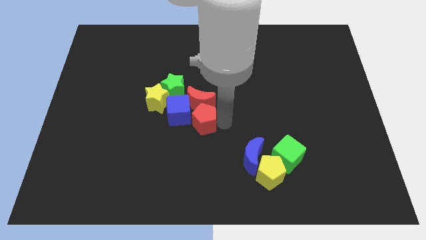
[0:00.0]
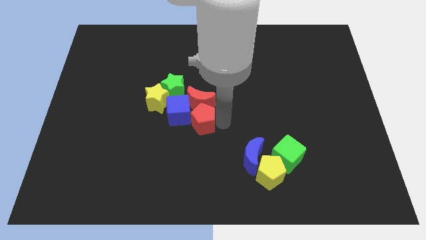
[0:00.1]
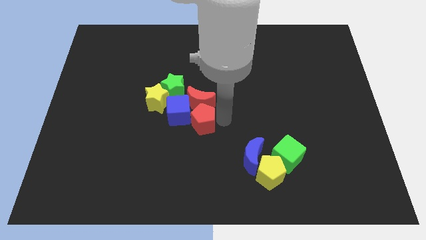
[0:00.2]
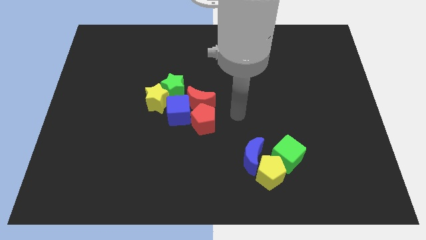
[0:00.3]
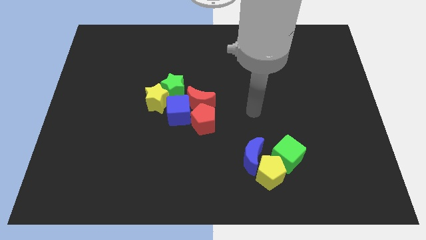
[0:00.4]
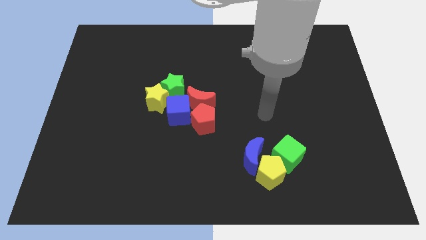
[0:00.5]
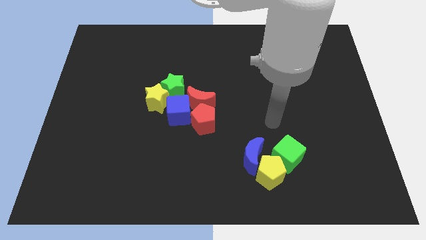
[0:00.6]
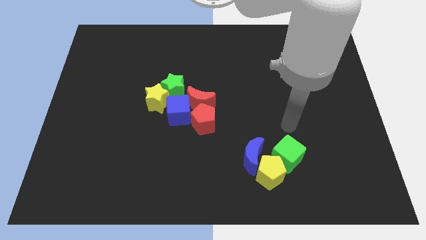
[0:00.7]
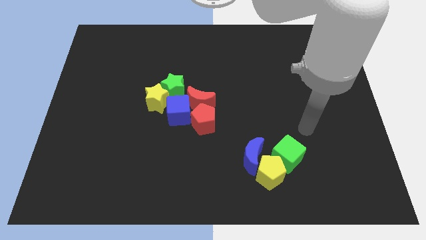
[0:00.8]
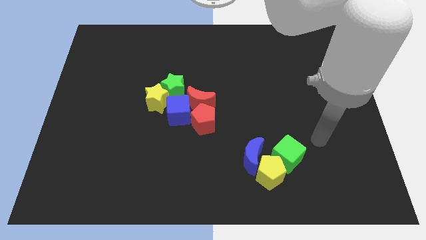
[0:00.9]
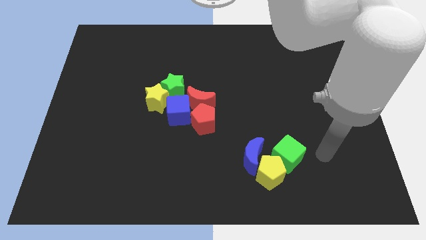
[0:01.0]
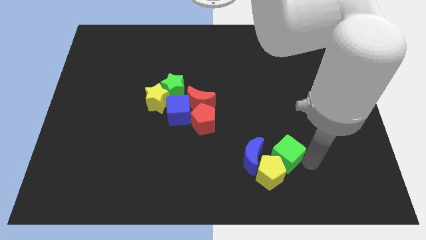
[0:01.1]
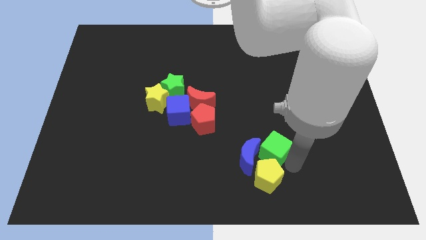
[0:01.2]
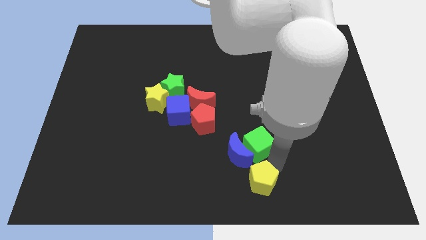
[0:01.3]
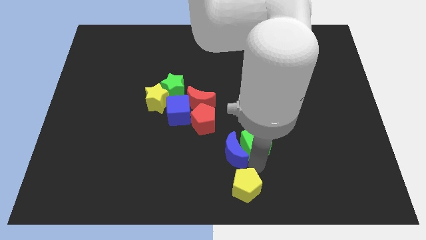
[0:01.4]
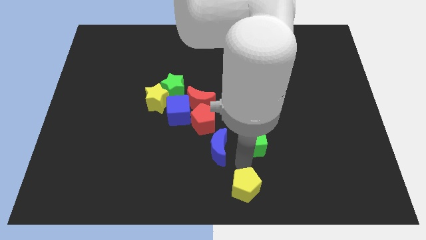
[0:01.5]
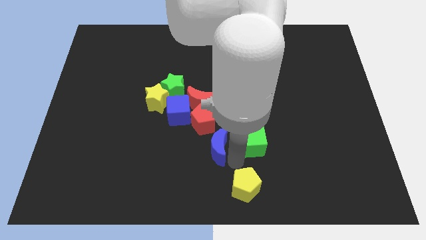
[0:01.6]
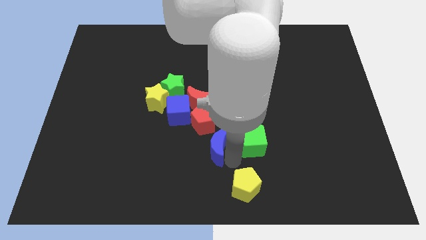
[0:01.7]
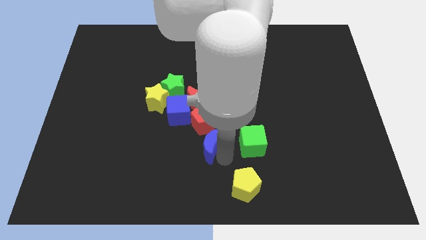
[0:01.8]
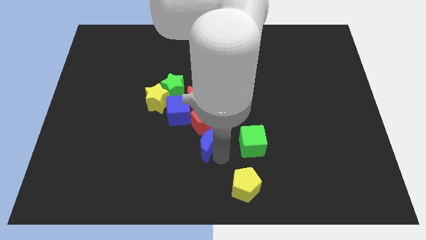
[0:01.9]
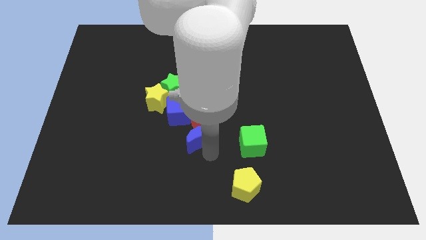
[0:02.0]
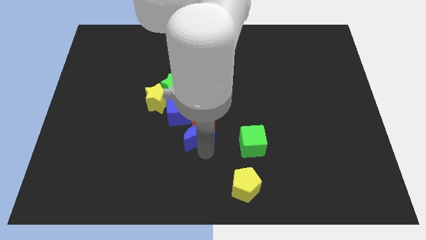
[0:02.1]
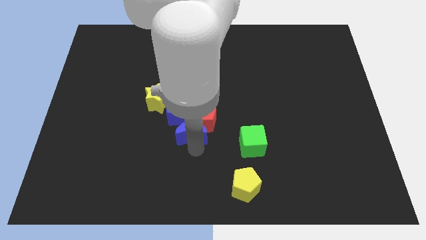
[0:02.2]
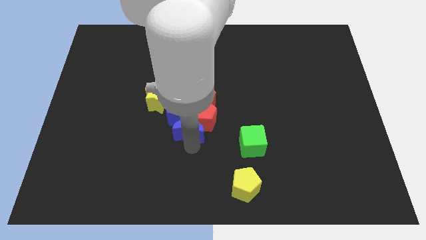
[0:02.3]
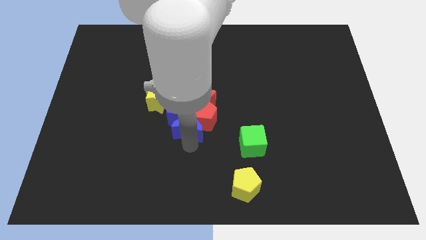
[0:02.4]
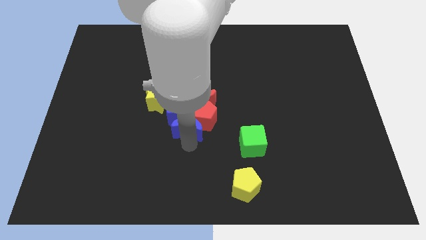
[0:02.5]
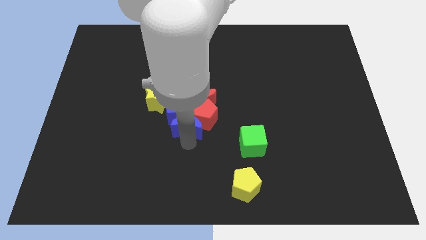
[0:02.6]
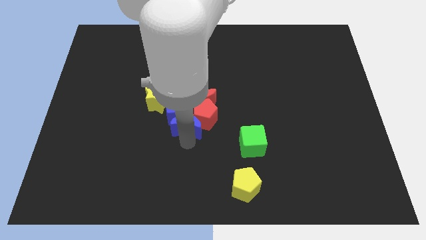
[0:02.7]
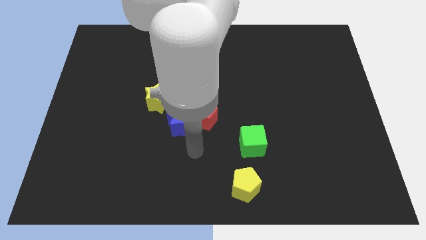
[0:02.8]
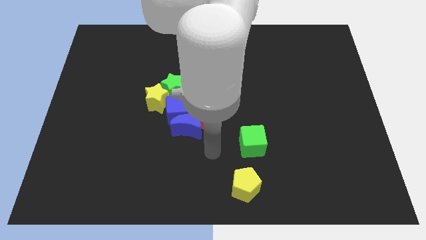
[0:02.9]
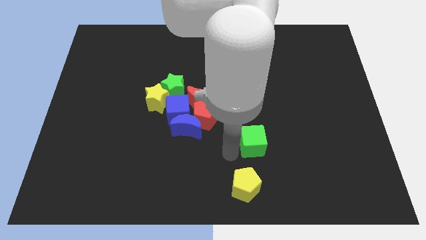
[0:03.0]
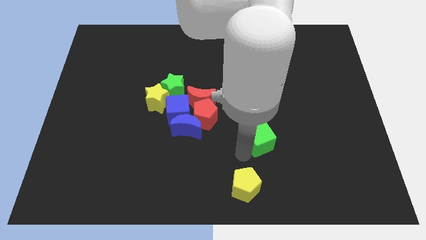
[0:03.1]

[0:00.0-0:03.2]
push the blue moon to the bottom left side of the red pentagon

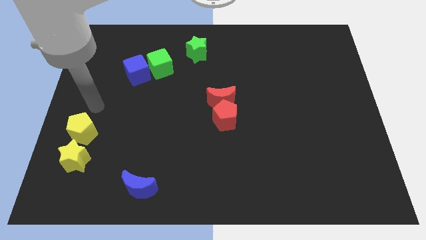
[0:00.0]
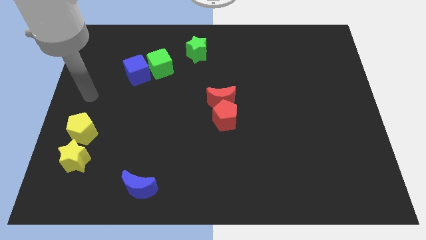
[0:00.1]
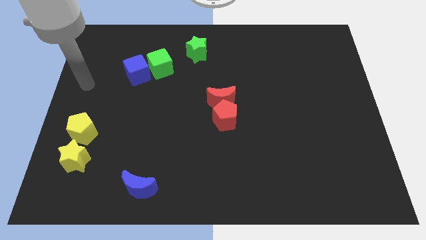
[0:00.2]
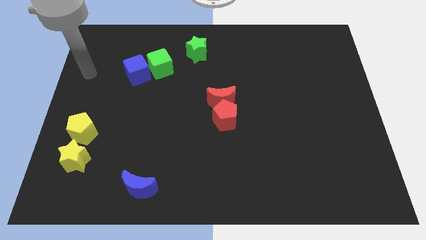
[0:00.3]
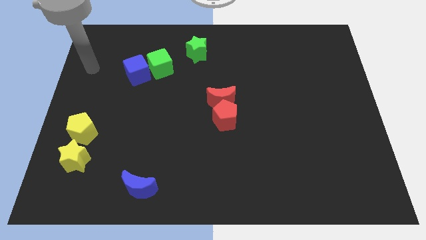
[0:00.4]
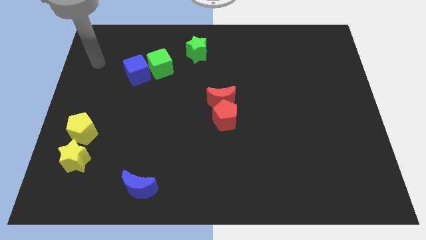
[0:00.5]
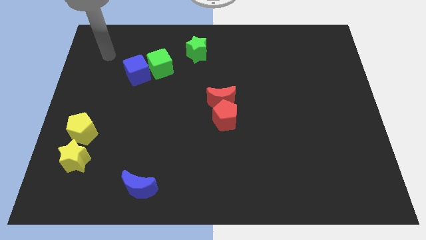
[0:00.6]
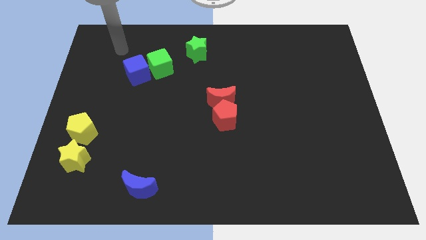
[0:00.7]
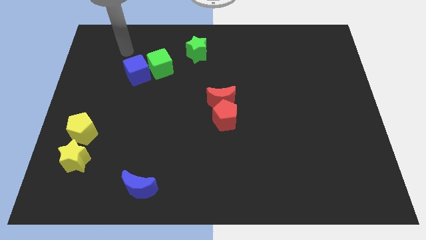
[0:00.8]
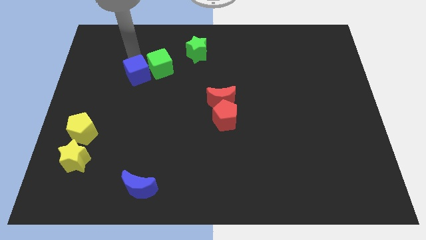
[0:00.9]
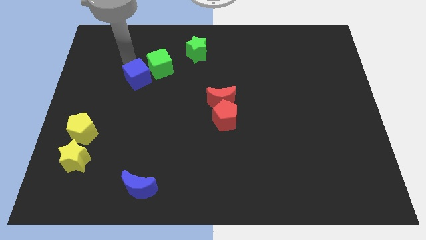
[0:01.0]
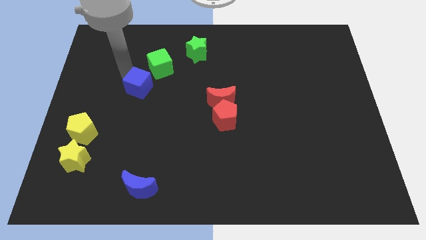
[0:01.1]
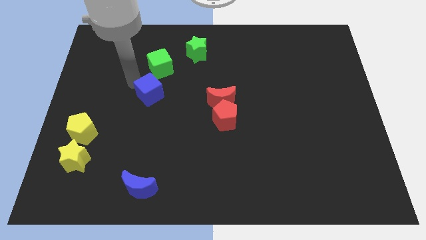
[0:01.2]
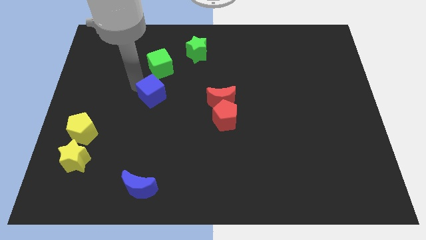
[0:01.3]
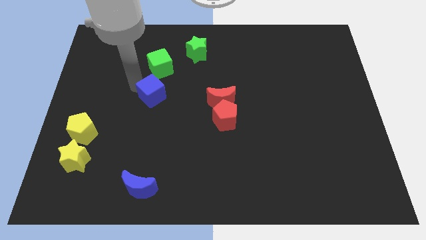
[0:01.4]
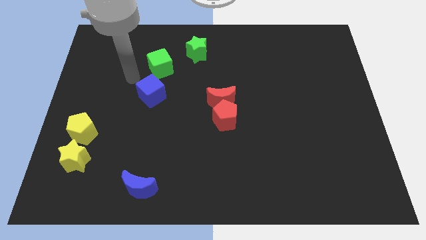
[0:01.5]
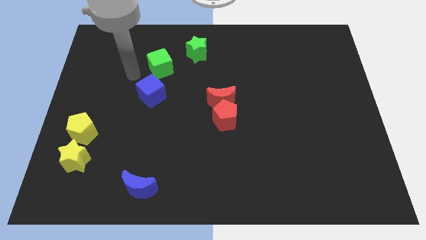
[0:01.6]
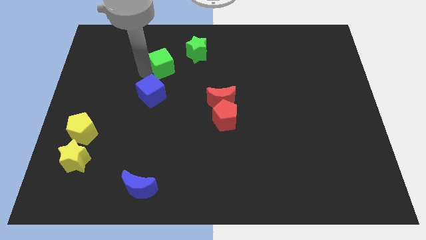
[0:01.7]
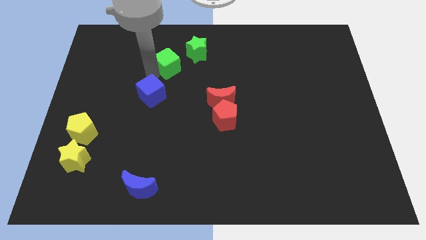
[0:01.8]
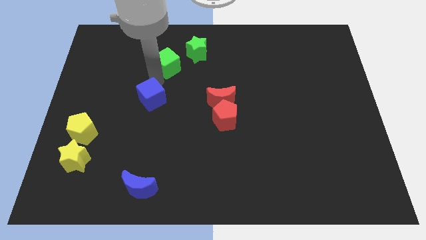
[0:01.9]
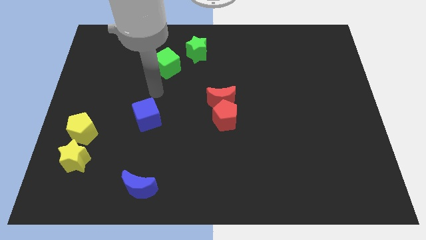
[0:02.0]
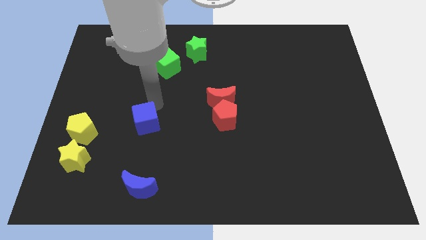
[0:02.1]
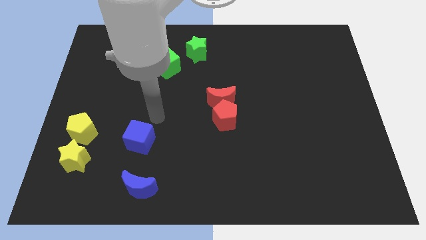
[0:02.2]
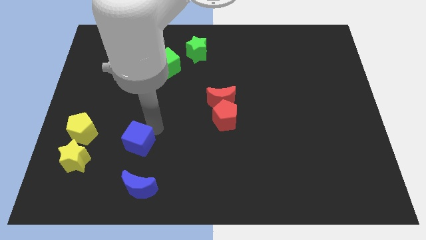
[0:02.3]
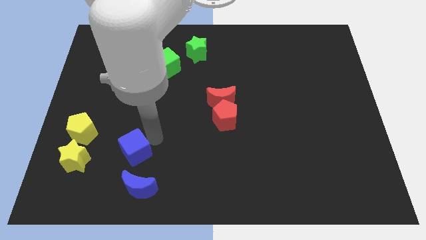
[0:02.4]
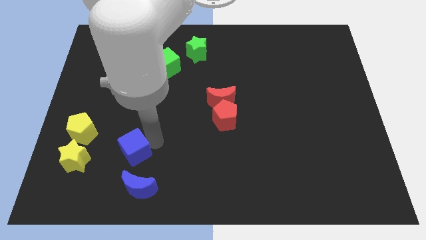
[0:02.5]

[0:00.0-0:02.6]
place the blue cube right to the yellow star

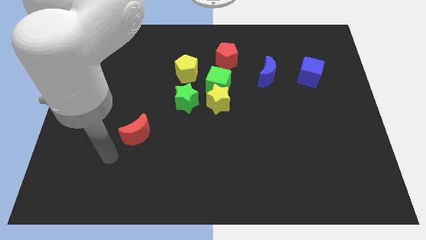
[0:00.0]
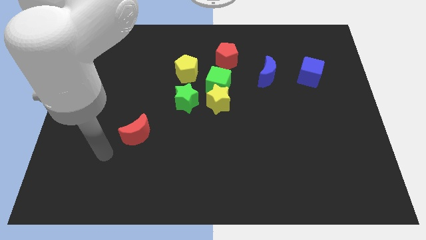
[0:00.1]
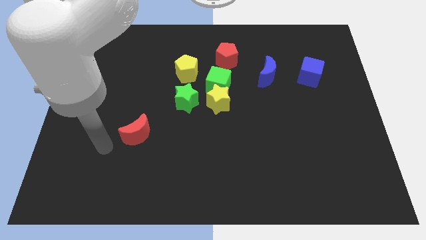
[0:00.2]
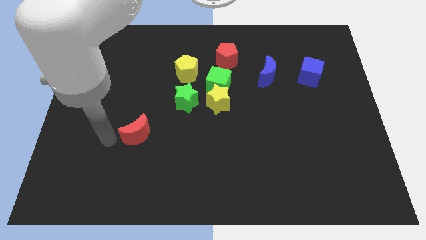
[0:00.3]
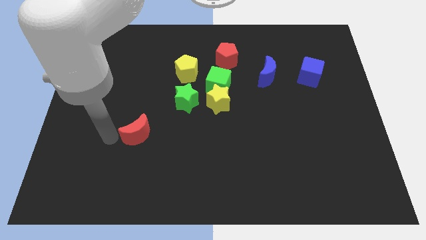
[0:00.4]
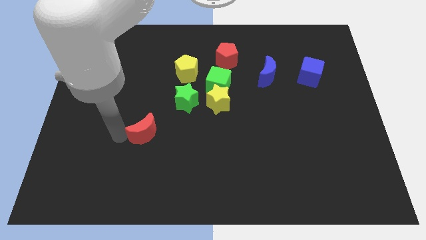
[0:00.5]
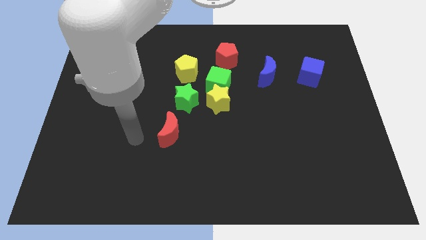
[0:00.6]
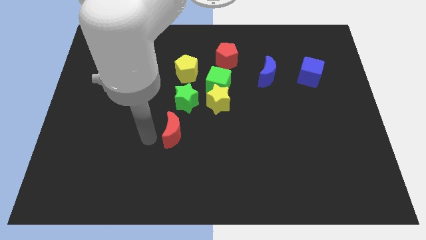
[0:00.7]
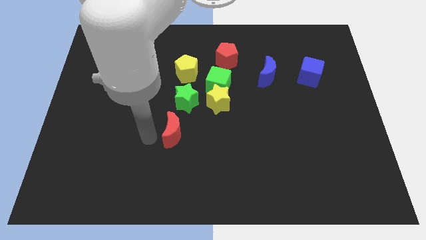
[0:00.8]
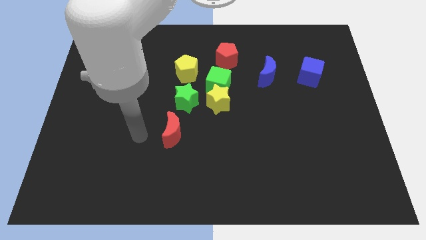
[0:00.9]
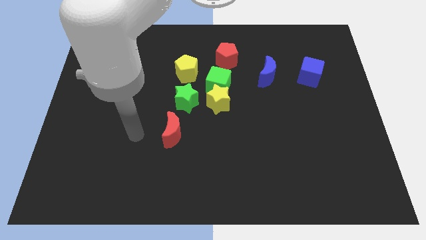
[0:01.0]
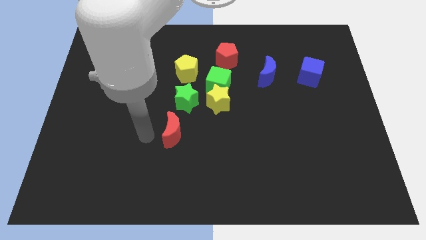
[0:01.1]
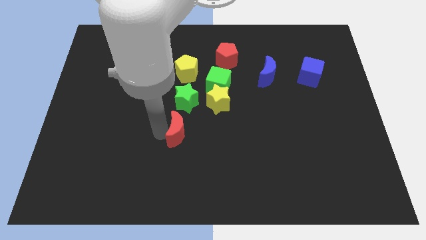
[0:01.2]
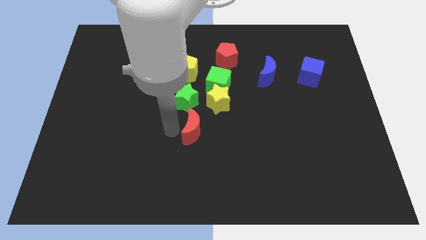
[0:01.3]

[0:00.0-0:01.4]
place the red moon below to the green star

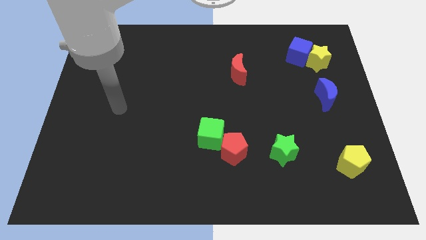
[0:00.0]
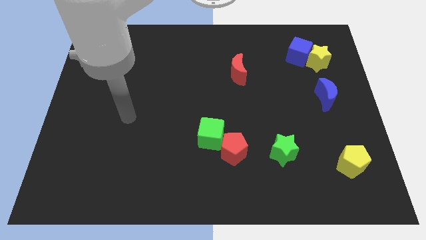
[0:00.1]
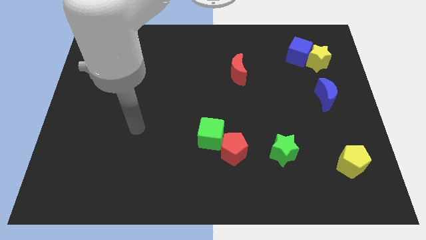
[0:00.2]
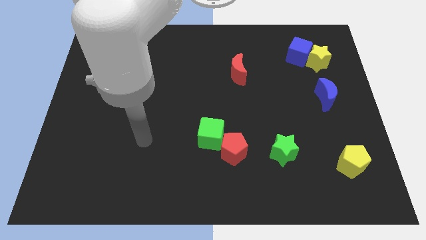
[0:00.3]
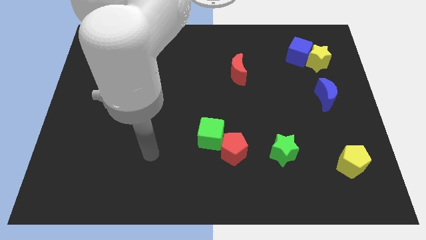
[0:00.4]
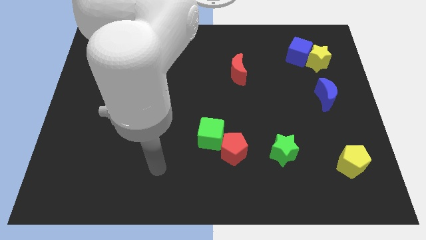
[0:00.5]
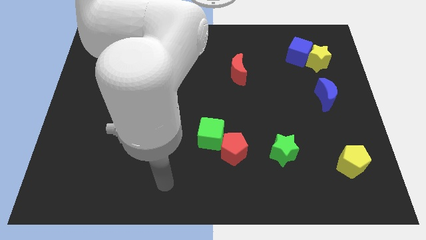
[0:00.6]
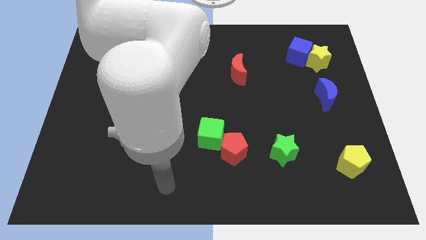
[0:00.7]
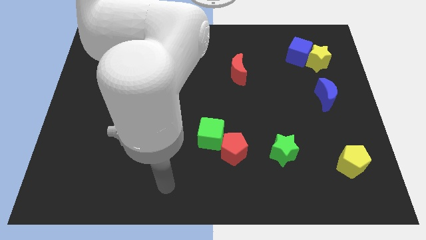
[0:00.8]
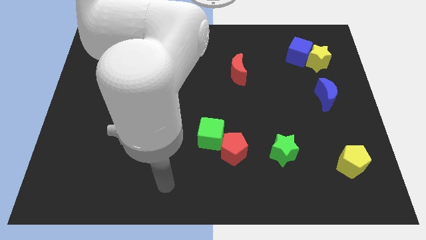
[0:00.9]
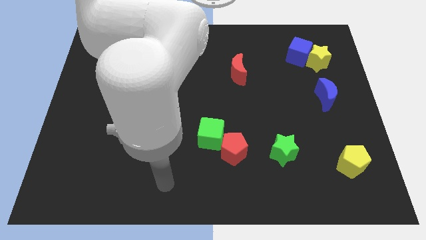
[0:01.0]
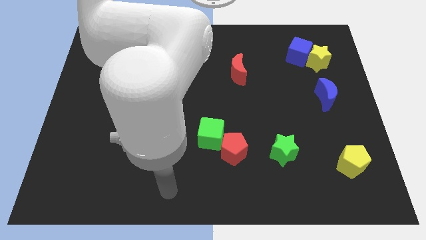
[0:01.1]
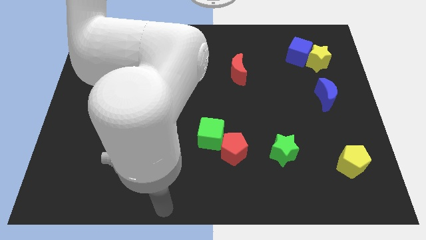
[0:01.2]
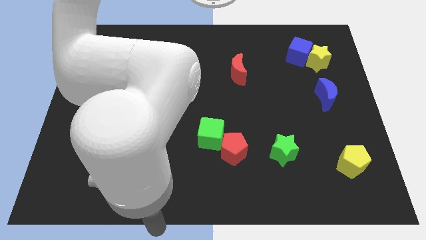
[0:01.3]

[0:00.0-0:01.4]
place the arm towards the center bottom of the board

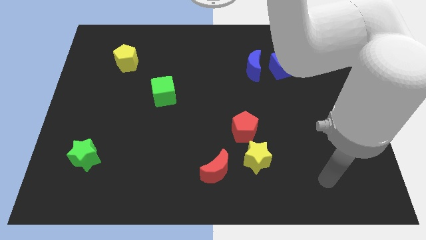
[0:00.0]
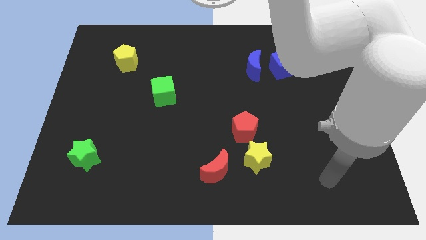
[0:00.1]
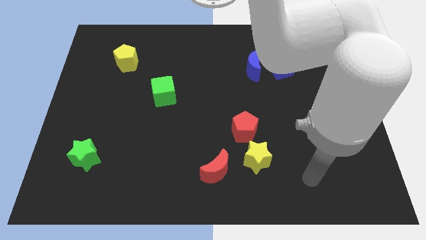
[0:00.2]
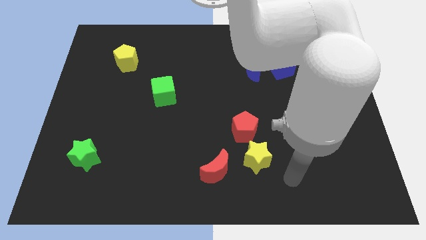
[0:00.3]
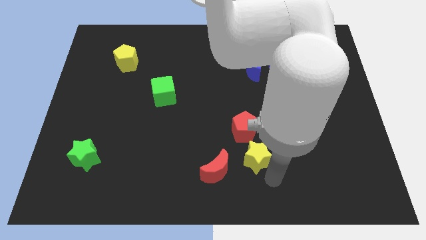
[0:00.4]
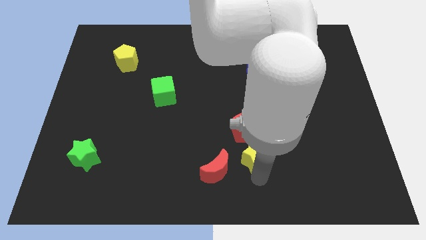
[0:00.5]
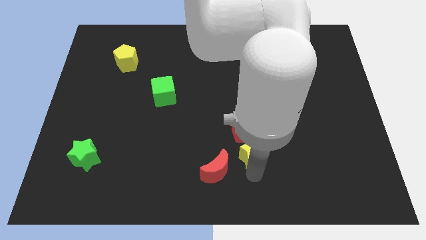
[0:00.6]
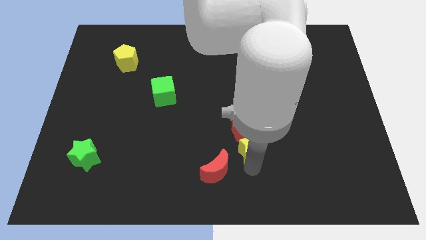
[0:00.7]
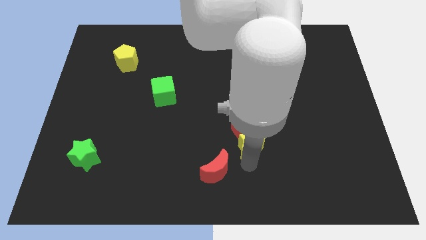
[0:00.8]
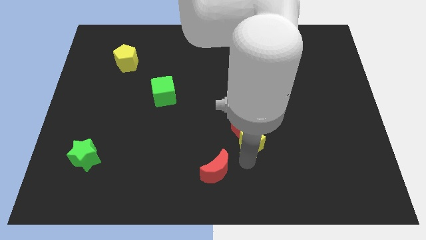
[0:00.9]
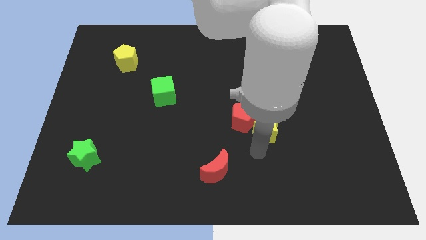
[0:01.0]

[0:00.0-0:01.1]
push the yellow star into the red pentagon
